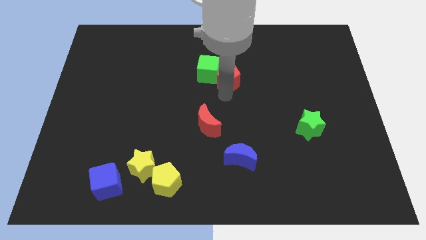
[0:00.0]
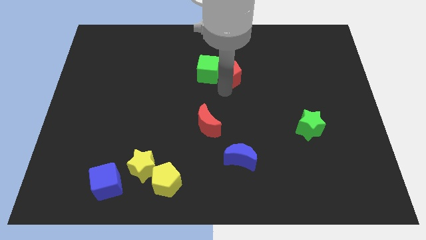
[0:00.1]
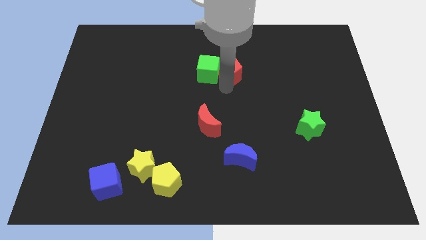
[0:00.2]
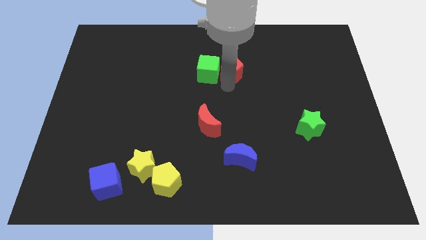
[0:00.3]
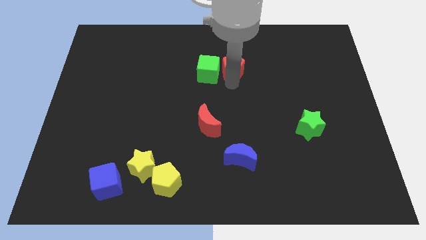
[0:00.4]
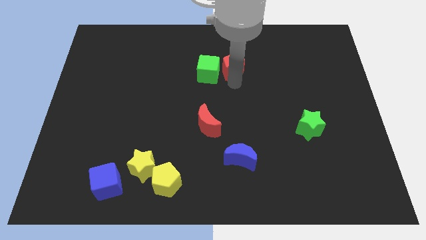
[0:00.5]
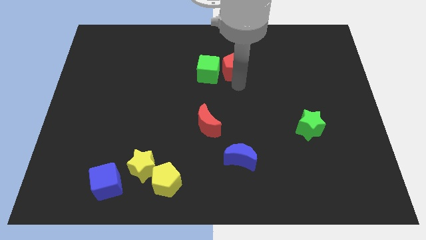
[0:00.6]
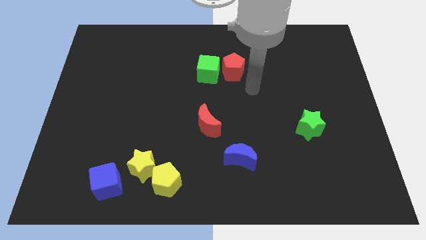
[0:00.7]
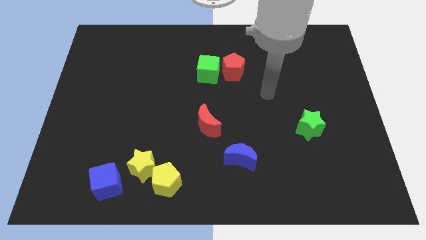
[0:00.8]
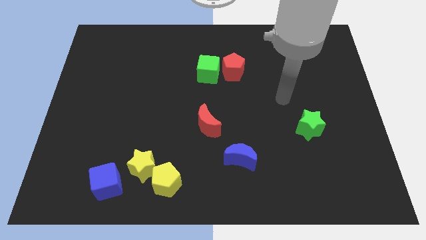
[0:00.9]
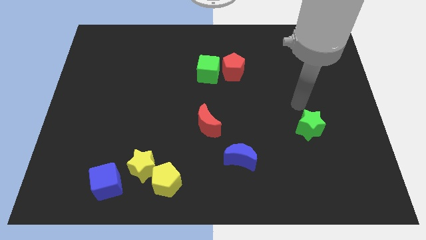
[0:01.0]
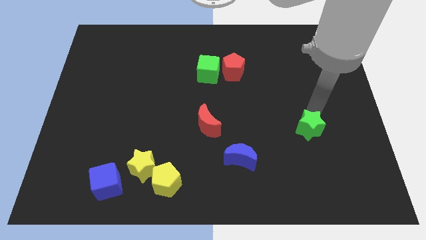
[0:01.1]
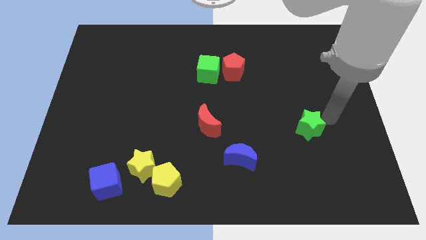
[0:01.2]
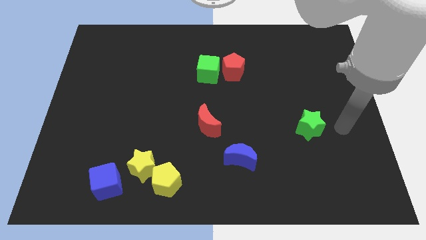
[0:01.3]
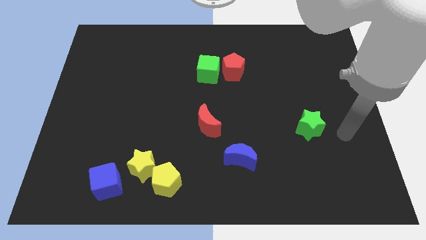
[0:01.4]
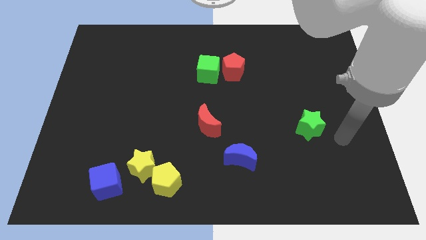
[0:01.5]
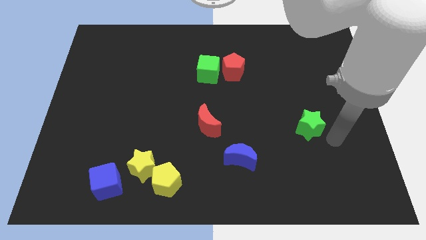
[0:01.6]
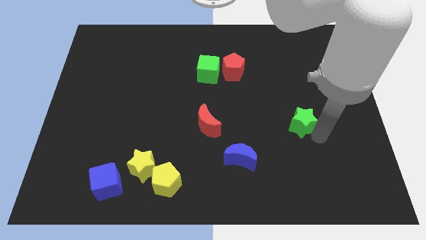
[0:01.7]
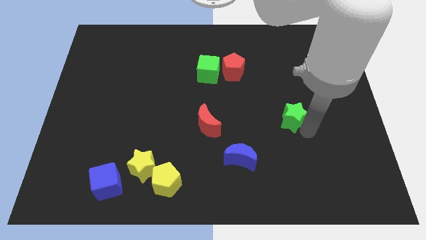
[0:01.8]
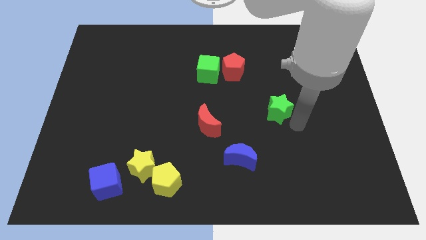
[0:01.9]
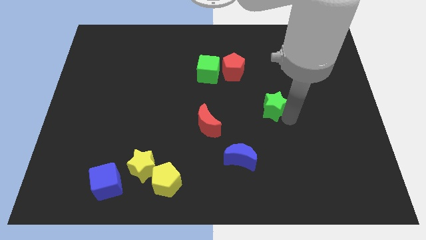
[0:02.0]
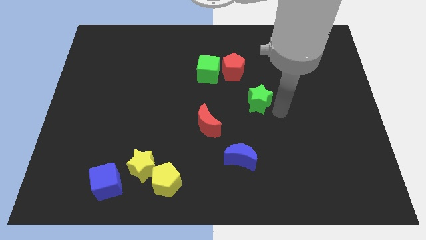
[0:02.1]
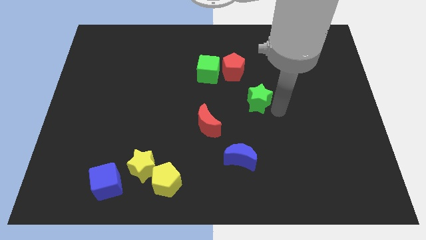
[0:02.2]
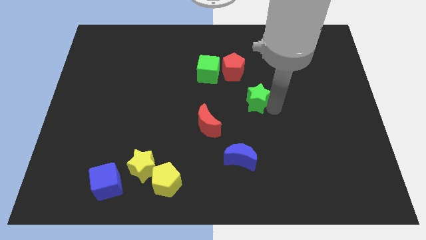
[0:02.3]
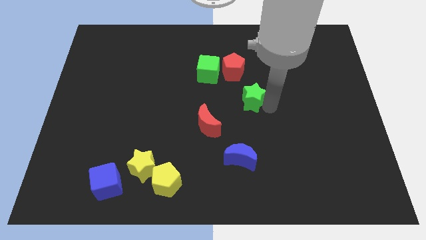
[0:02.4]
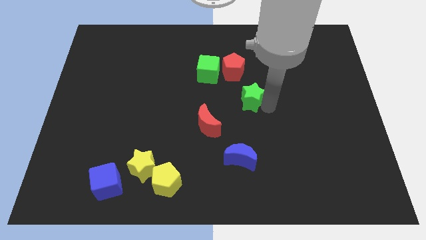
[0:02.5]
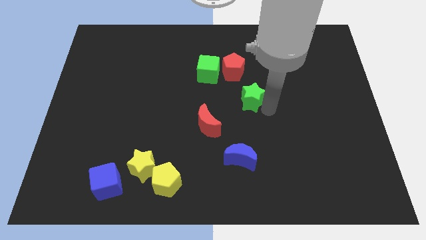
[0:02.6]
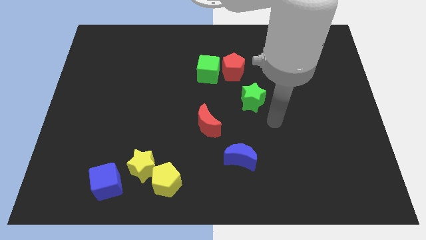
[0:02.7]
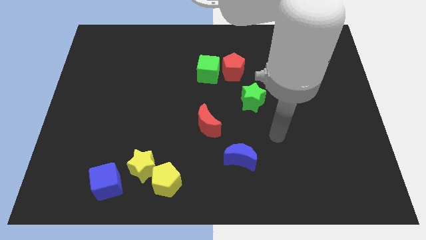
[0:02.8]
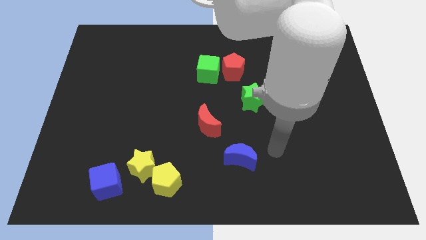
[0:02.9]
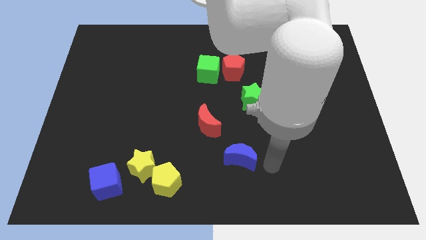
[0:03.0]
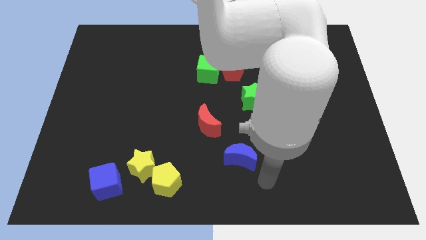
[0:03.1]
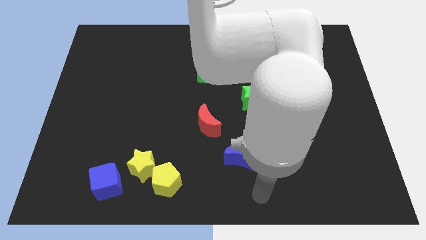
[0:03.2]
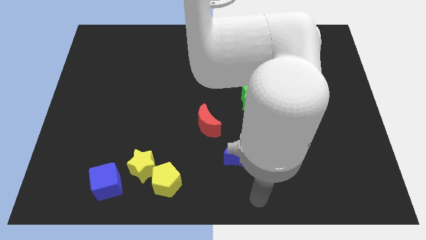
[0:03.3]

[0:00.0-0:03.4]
place the green star diagonally above the top right side of the red moon

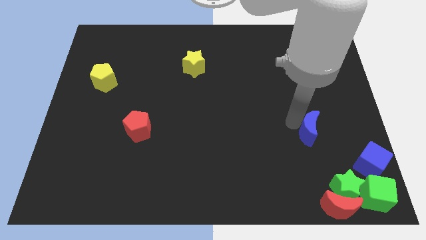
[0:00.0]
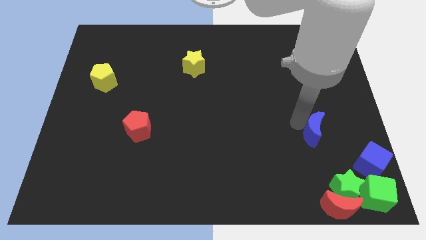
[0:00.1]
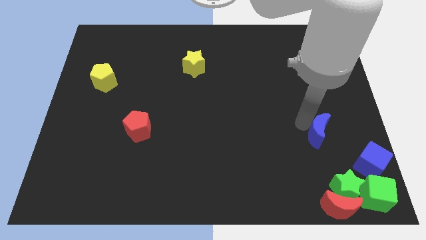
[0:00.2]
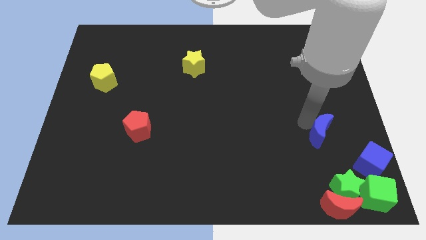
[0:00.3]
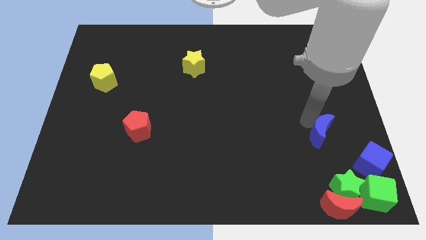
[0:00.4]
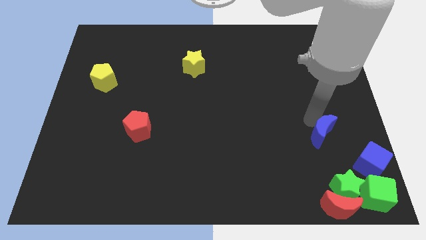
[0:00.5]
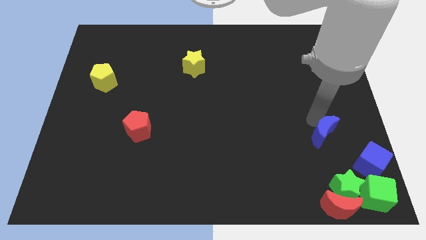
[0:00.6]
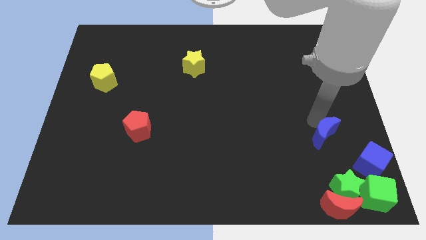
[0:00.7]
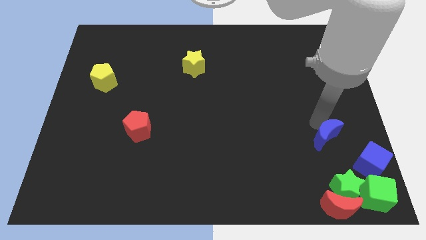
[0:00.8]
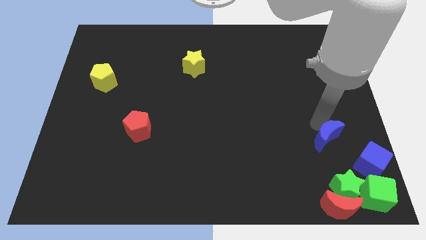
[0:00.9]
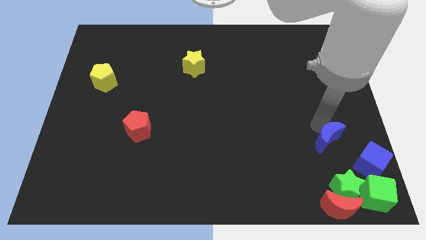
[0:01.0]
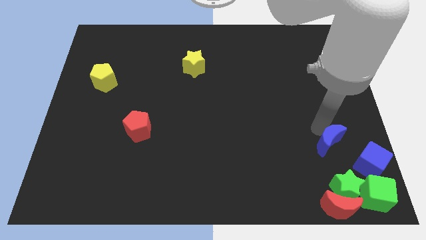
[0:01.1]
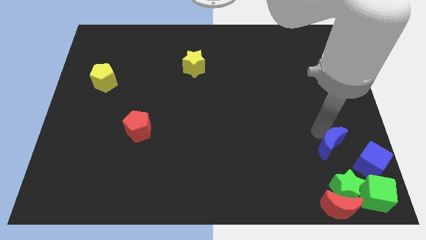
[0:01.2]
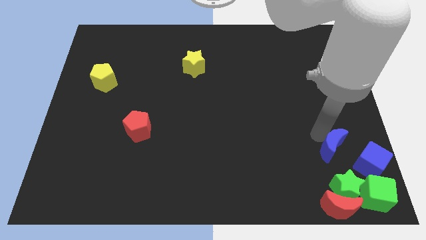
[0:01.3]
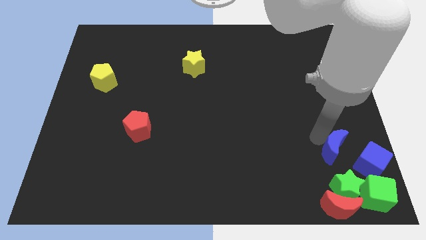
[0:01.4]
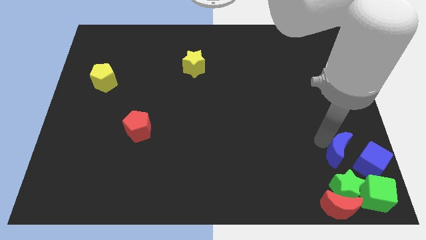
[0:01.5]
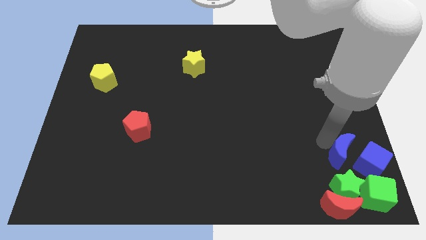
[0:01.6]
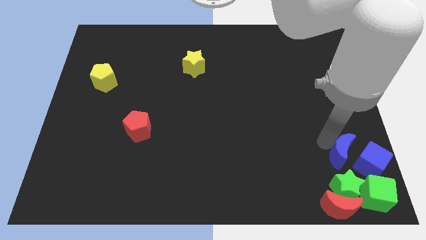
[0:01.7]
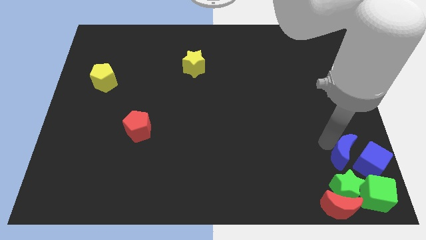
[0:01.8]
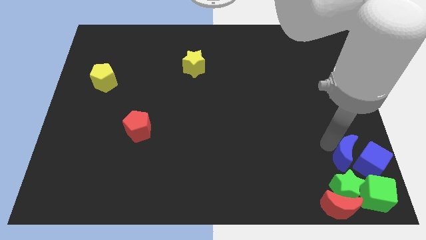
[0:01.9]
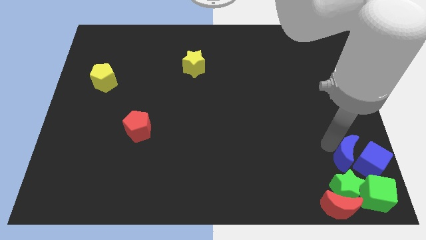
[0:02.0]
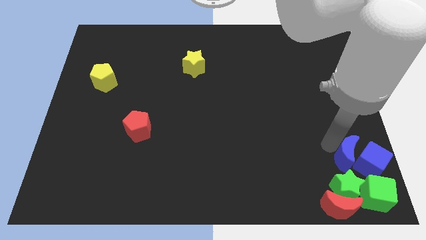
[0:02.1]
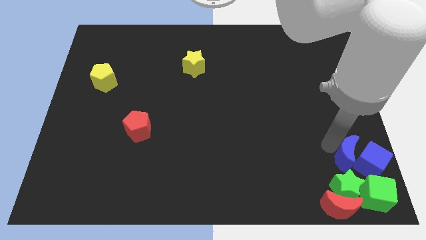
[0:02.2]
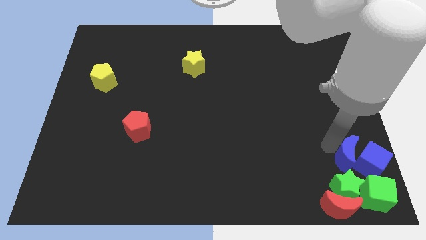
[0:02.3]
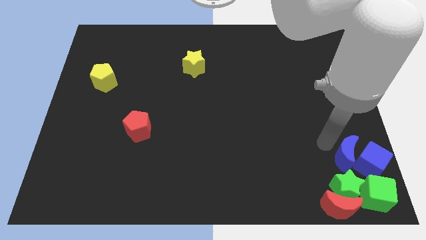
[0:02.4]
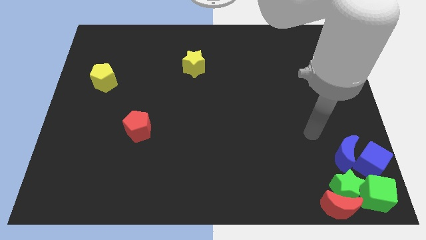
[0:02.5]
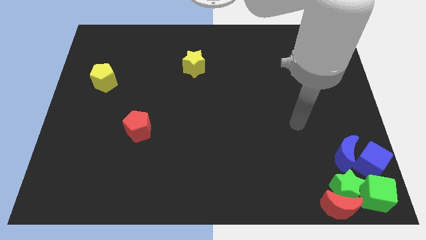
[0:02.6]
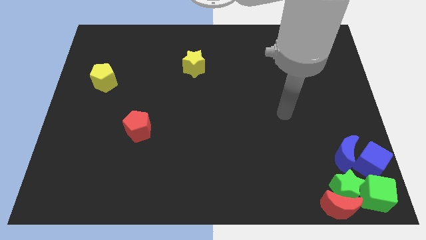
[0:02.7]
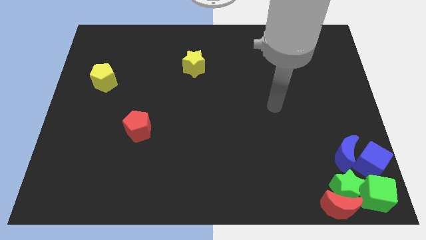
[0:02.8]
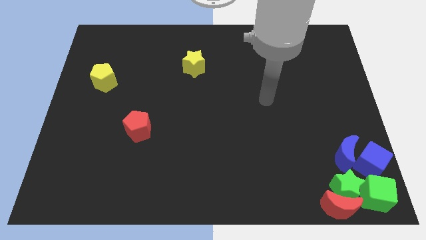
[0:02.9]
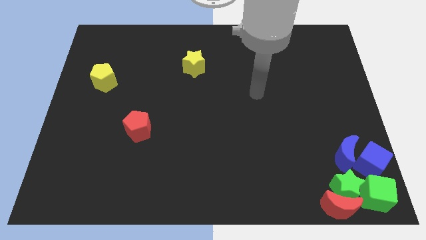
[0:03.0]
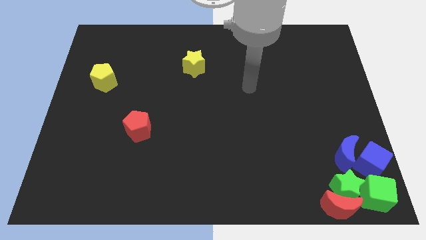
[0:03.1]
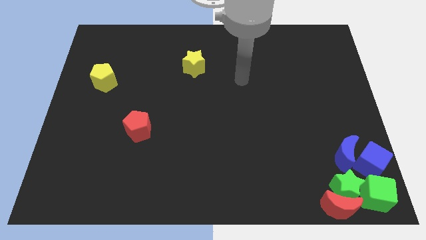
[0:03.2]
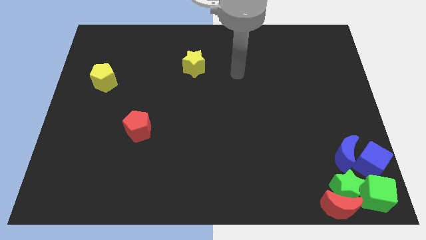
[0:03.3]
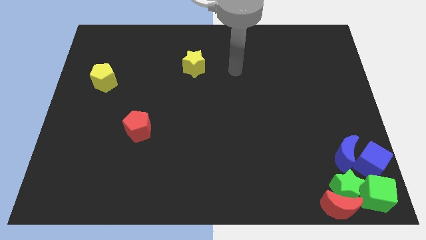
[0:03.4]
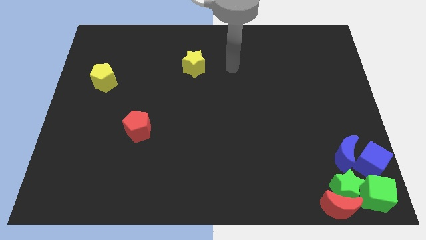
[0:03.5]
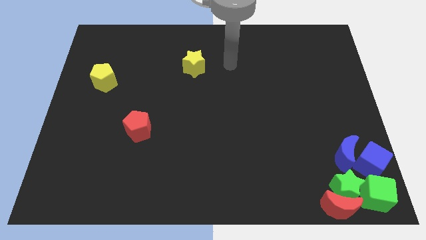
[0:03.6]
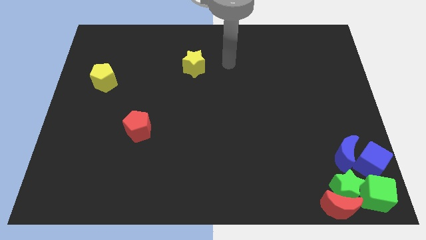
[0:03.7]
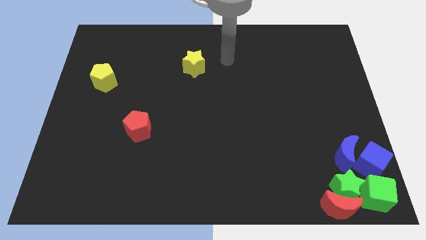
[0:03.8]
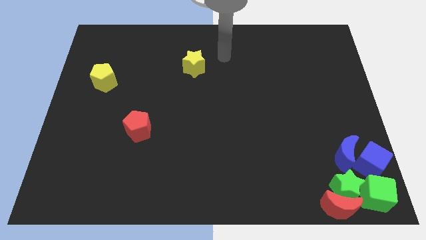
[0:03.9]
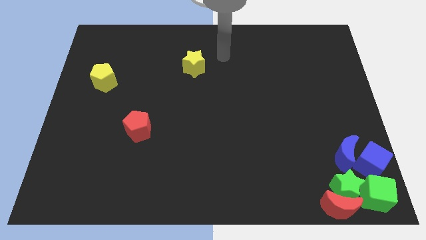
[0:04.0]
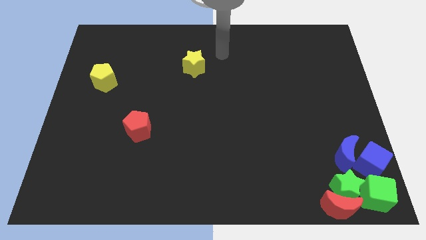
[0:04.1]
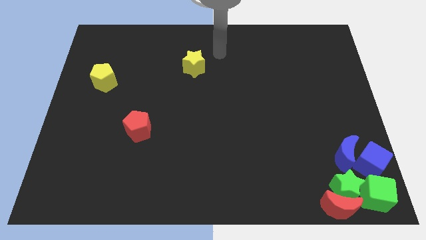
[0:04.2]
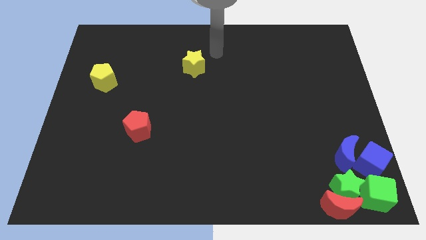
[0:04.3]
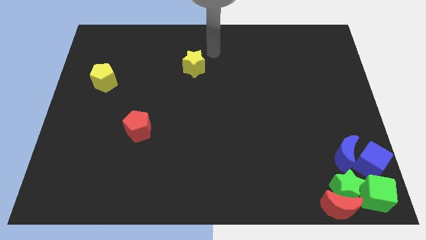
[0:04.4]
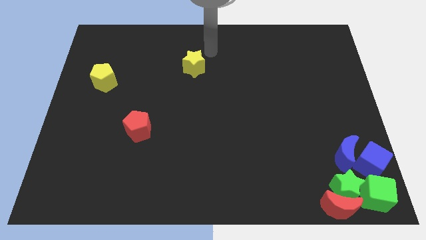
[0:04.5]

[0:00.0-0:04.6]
place the blue moon left to the blue cube

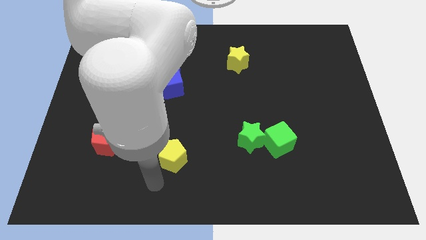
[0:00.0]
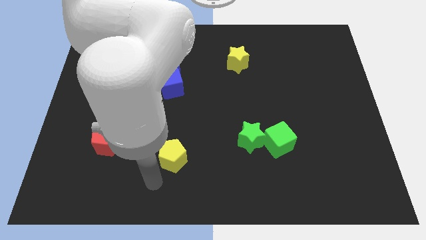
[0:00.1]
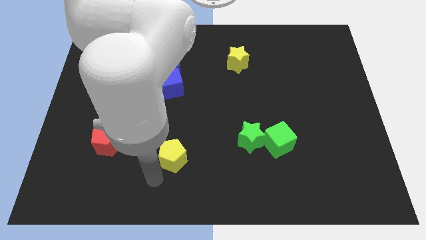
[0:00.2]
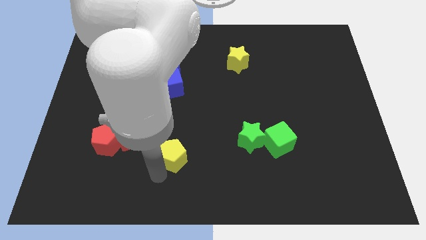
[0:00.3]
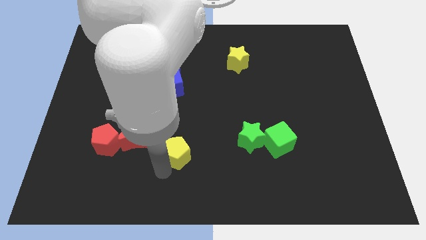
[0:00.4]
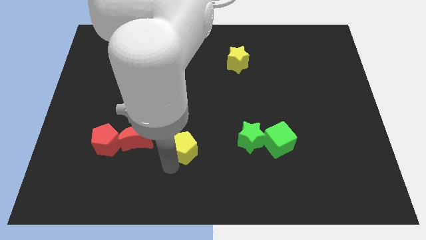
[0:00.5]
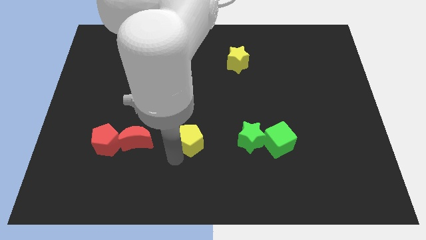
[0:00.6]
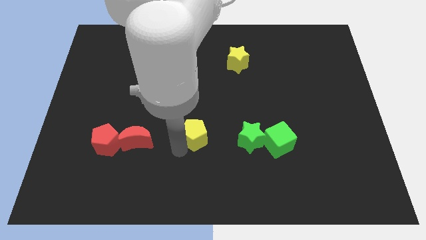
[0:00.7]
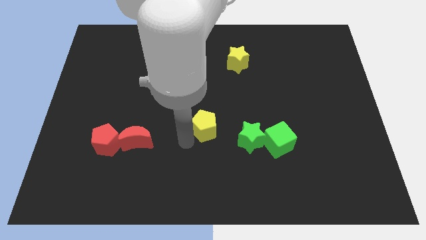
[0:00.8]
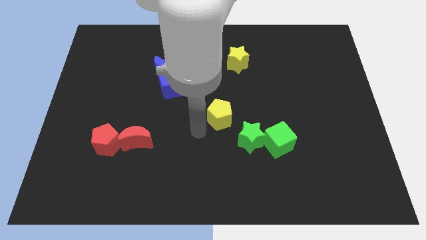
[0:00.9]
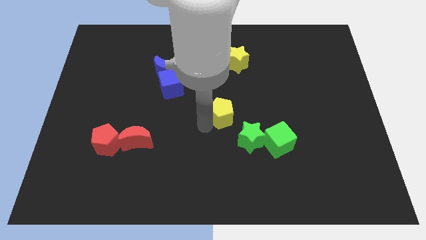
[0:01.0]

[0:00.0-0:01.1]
place the yellow pentagon towards the top left side of the green star
